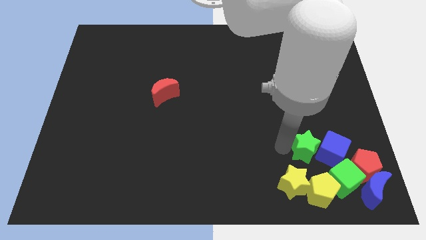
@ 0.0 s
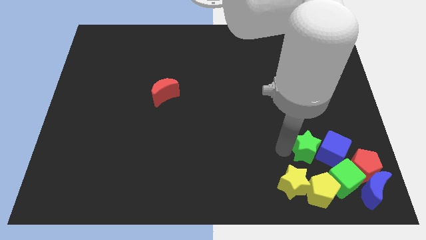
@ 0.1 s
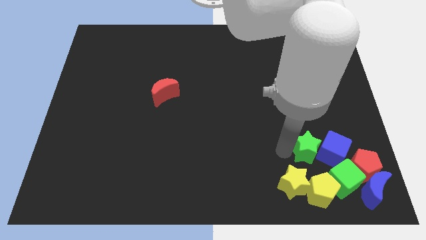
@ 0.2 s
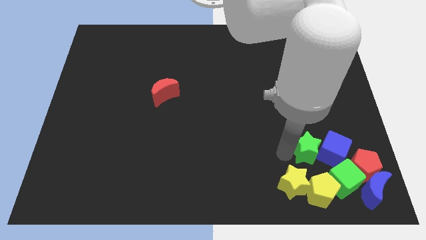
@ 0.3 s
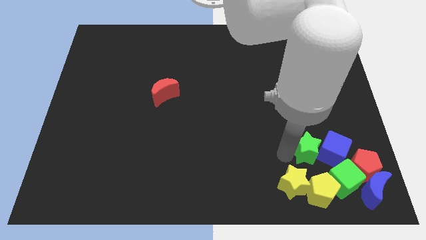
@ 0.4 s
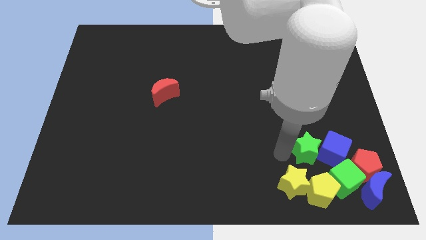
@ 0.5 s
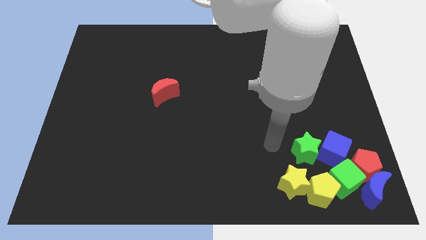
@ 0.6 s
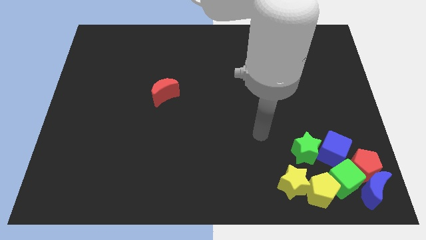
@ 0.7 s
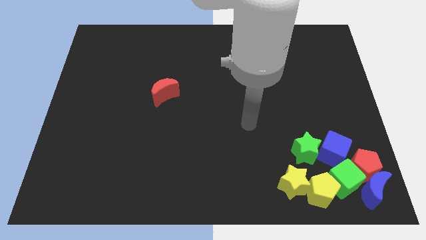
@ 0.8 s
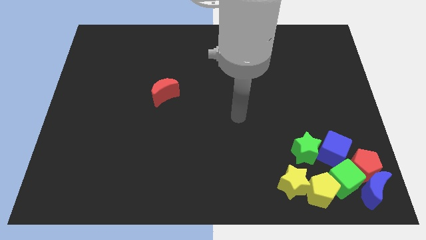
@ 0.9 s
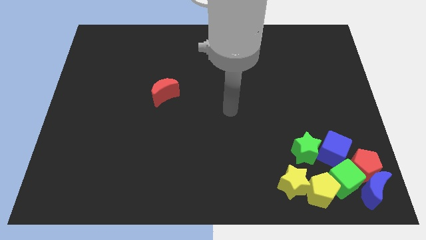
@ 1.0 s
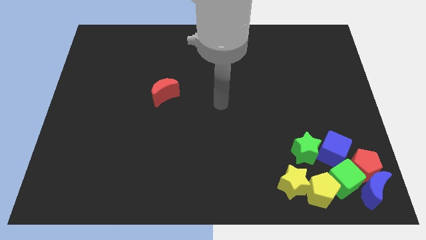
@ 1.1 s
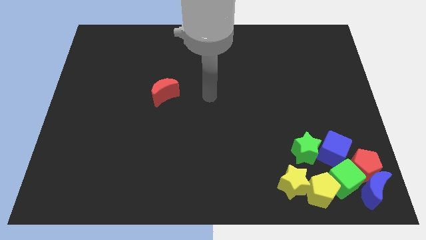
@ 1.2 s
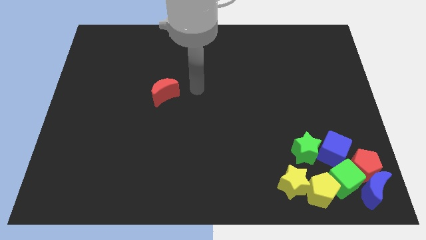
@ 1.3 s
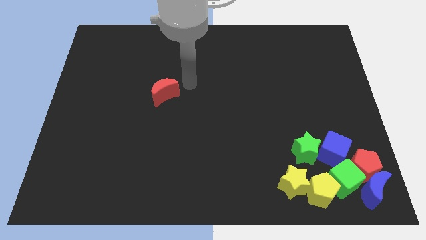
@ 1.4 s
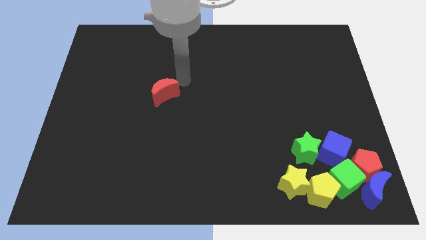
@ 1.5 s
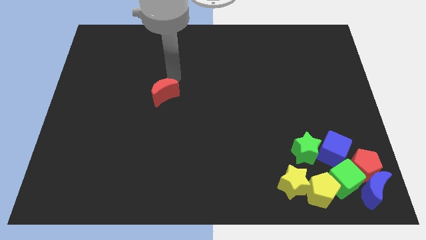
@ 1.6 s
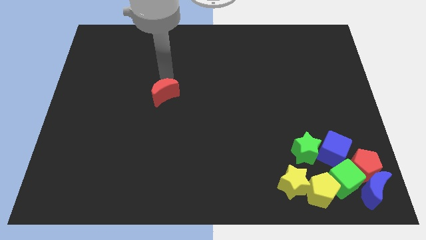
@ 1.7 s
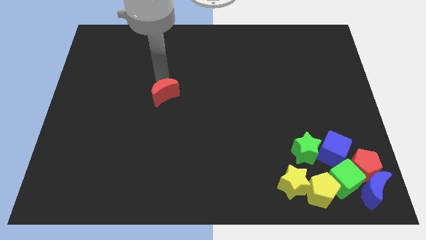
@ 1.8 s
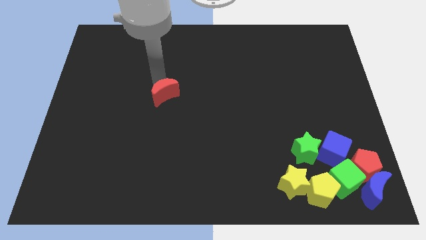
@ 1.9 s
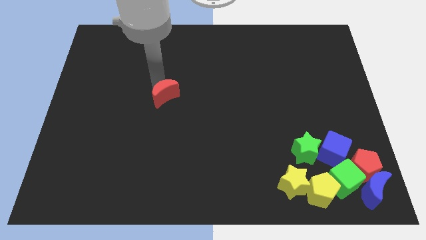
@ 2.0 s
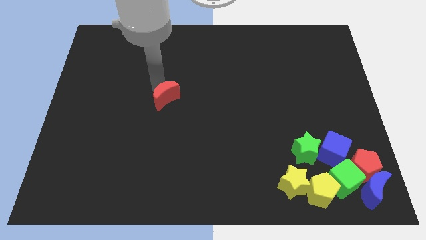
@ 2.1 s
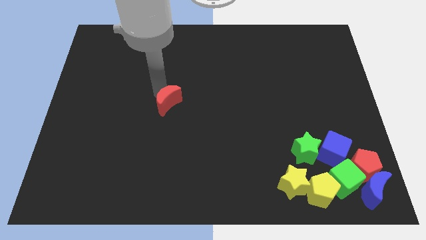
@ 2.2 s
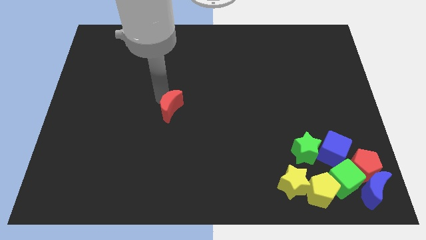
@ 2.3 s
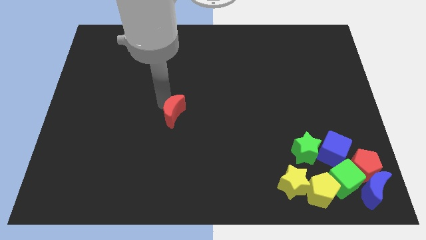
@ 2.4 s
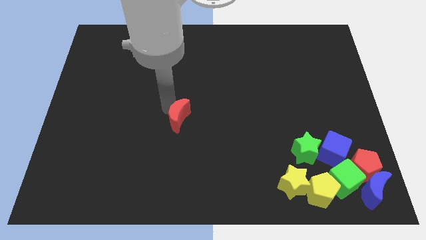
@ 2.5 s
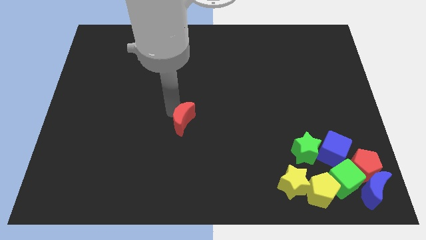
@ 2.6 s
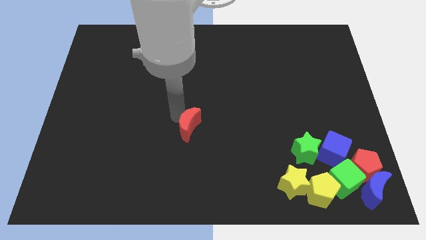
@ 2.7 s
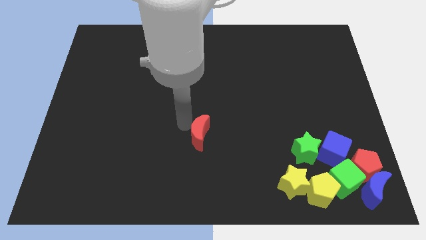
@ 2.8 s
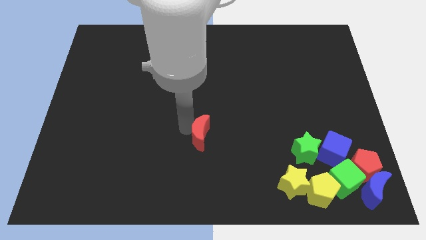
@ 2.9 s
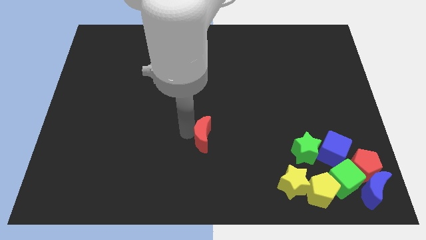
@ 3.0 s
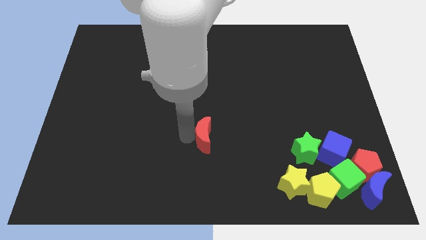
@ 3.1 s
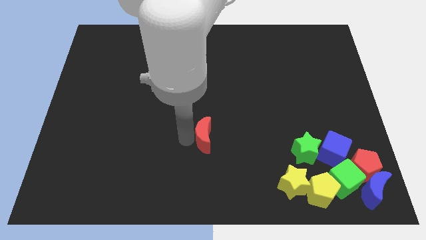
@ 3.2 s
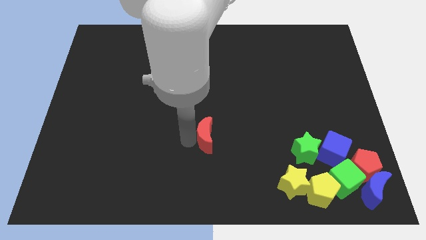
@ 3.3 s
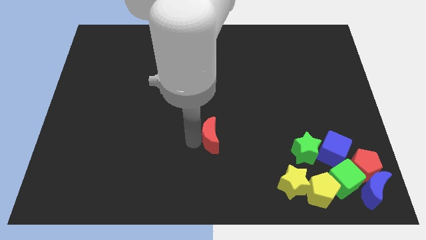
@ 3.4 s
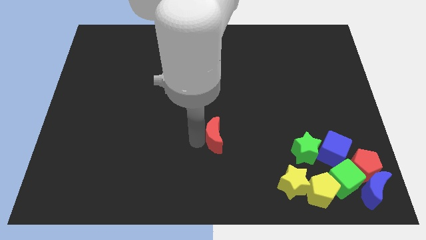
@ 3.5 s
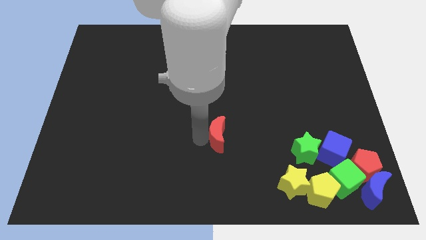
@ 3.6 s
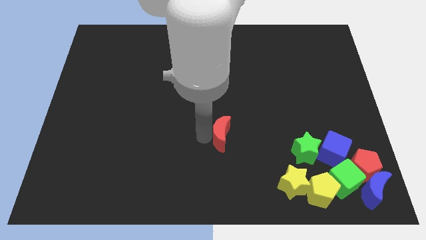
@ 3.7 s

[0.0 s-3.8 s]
move the red crescent towards the group of blocks

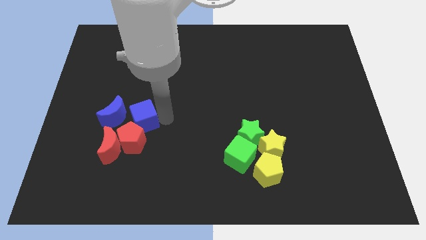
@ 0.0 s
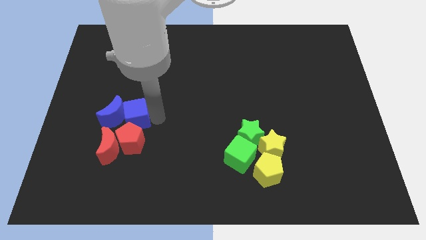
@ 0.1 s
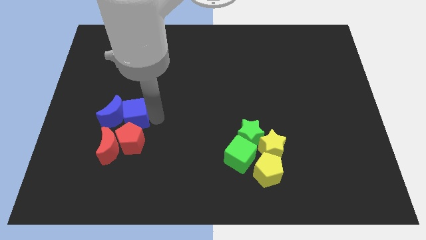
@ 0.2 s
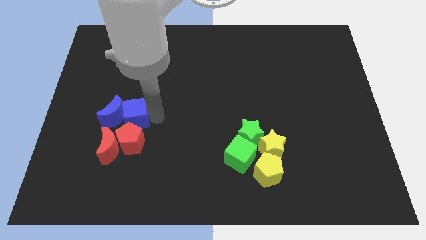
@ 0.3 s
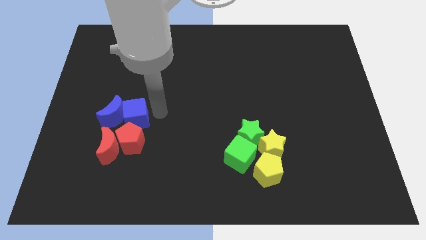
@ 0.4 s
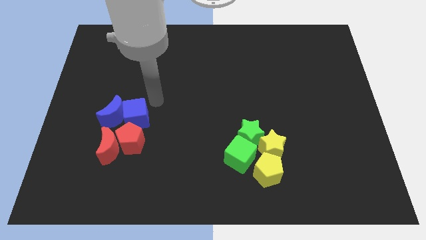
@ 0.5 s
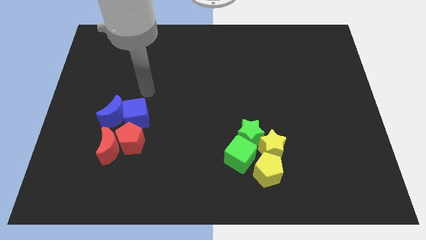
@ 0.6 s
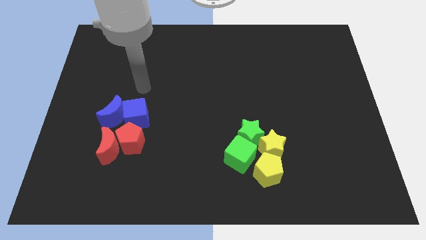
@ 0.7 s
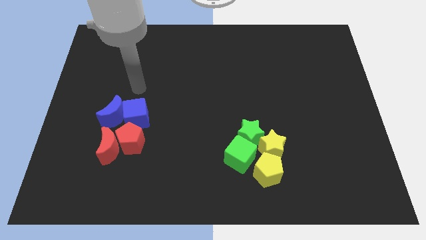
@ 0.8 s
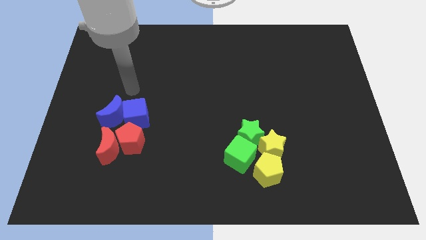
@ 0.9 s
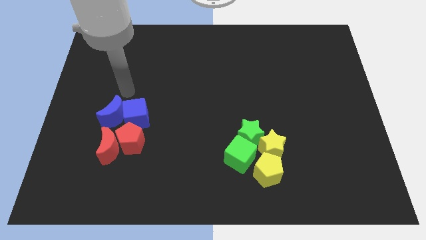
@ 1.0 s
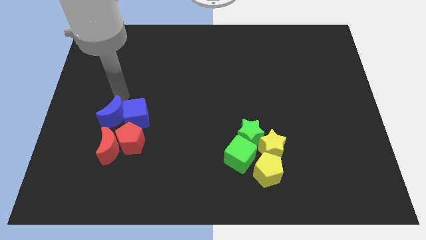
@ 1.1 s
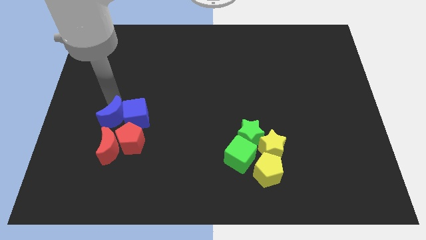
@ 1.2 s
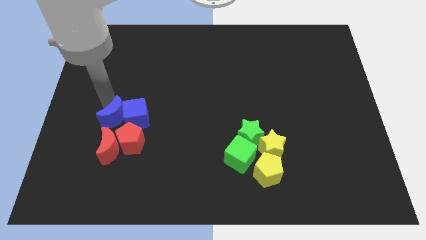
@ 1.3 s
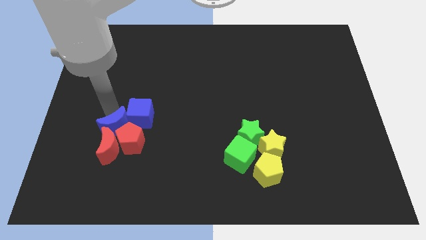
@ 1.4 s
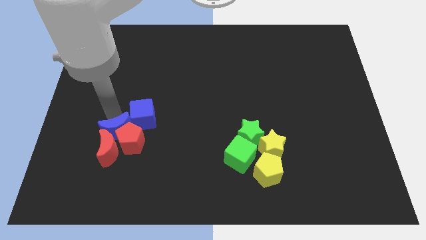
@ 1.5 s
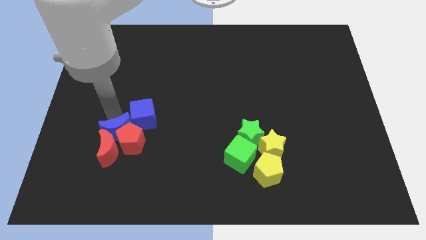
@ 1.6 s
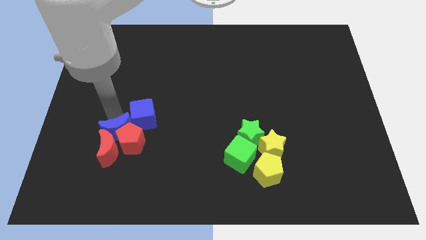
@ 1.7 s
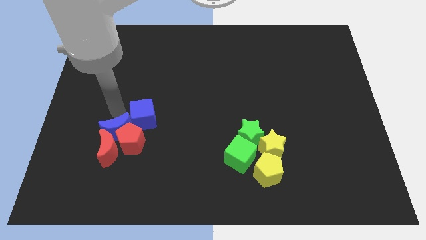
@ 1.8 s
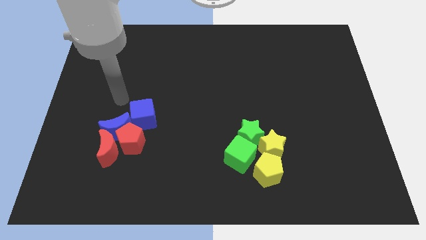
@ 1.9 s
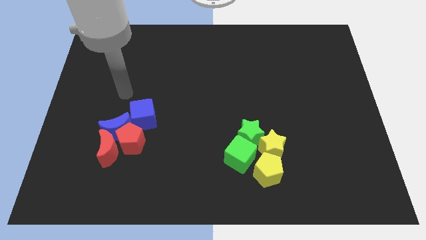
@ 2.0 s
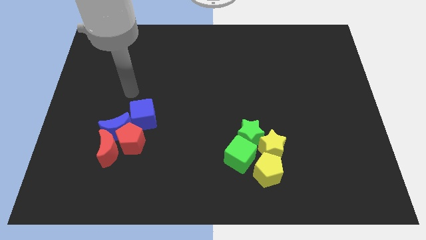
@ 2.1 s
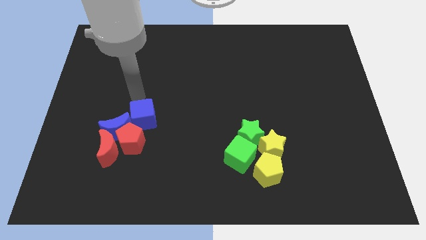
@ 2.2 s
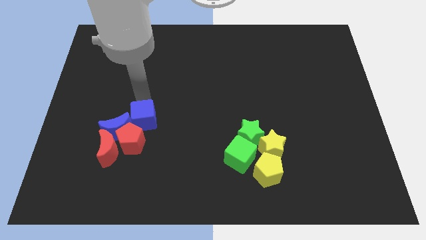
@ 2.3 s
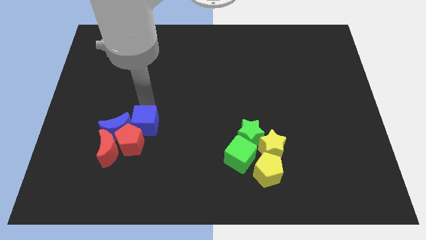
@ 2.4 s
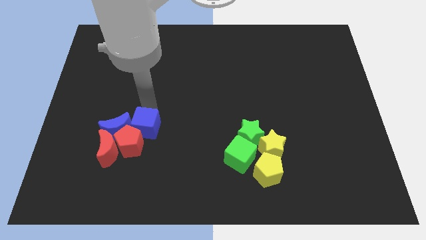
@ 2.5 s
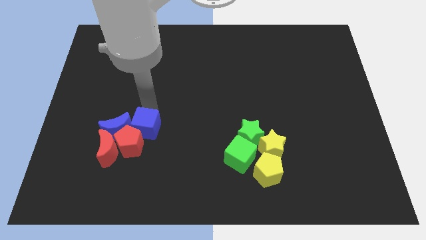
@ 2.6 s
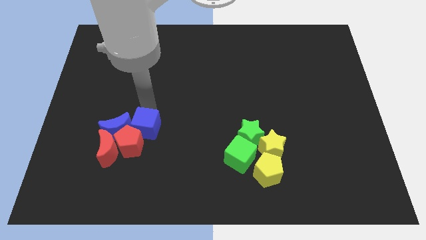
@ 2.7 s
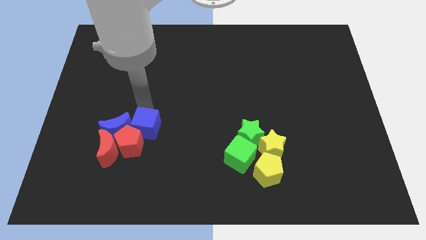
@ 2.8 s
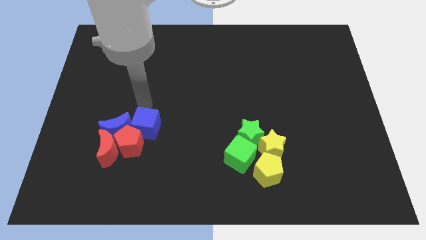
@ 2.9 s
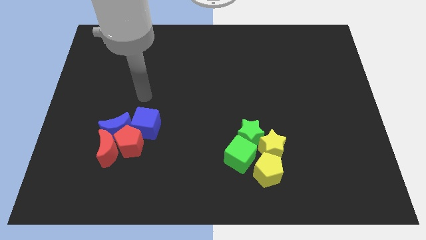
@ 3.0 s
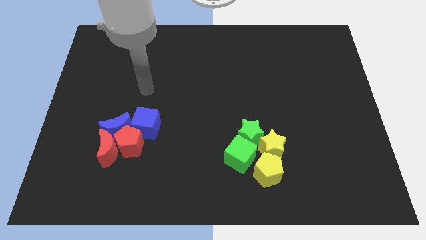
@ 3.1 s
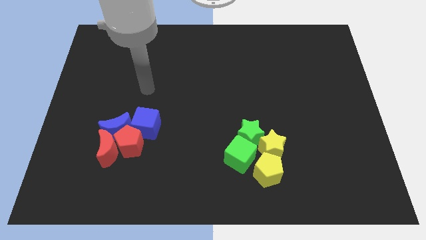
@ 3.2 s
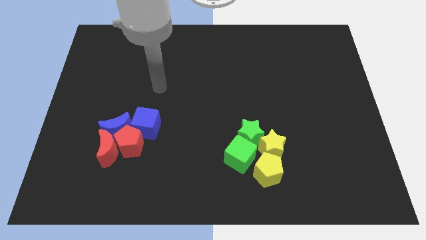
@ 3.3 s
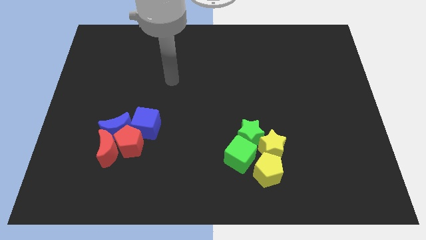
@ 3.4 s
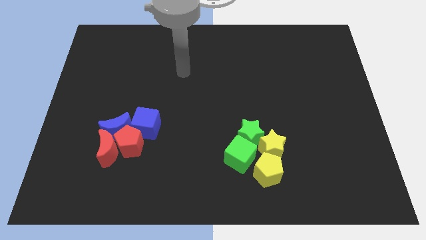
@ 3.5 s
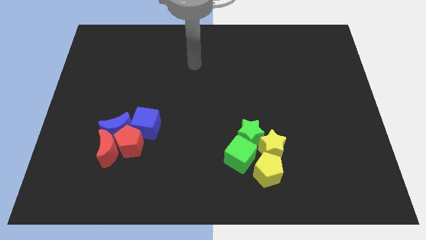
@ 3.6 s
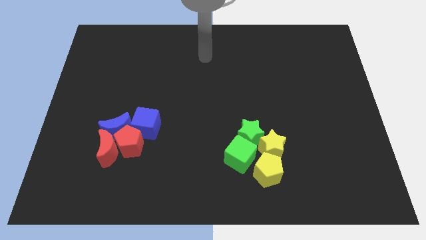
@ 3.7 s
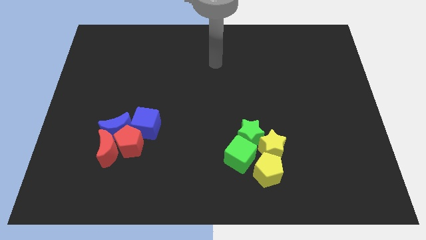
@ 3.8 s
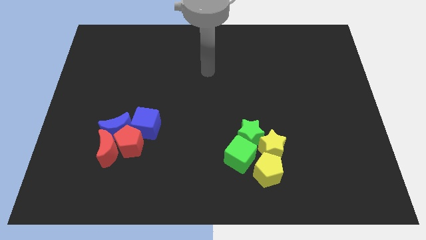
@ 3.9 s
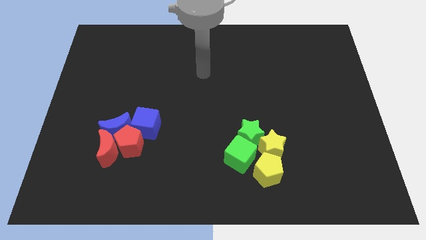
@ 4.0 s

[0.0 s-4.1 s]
adjust the both blue blocks to form a group with the both red blocks

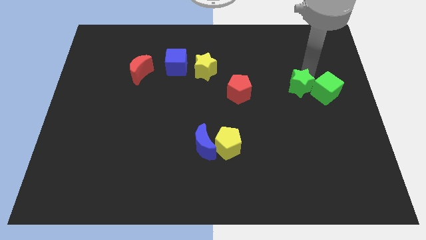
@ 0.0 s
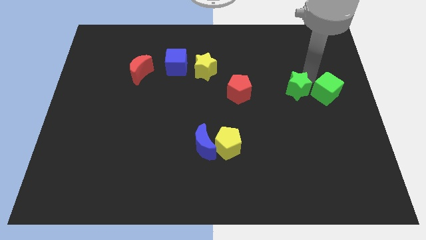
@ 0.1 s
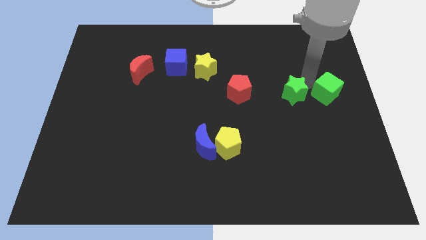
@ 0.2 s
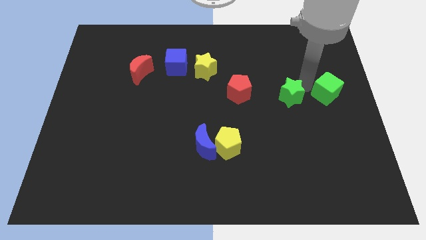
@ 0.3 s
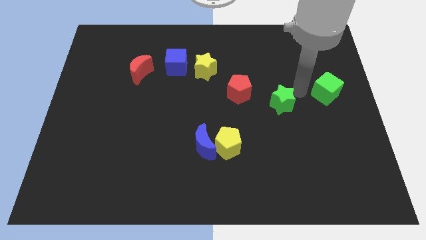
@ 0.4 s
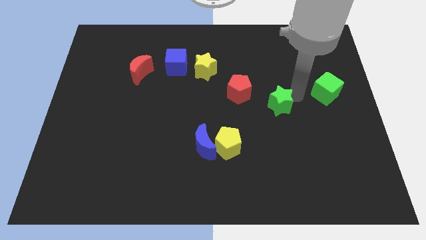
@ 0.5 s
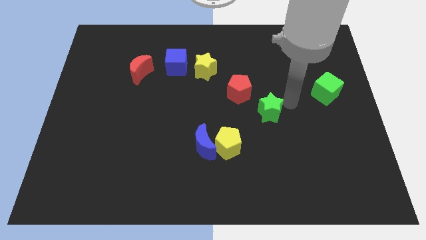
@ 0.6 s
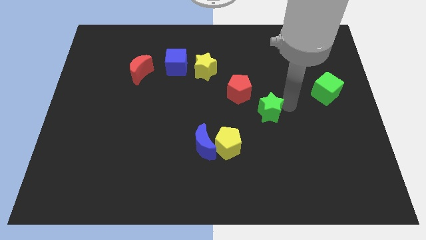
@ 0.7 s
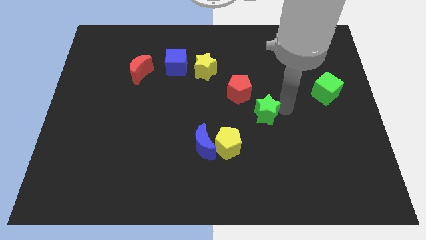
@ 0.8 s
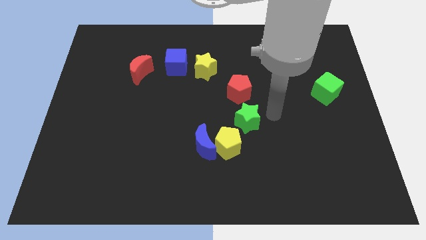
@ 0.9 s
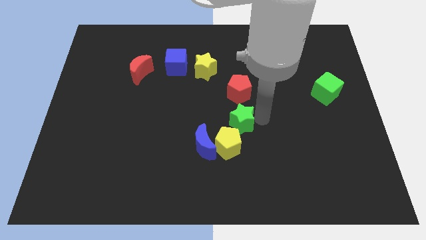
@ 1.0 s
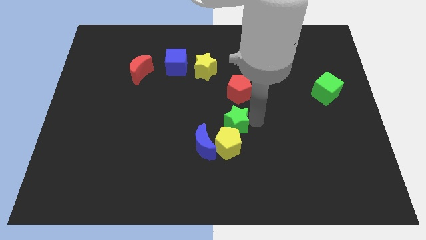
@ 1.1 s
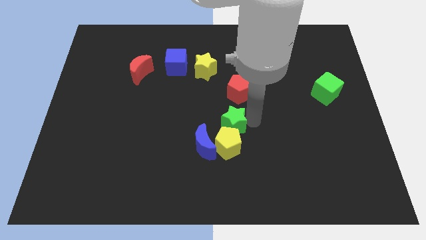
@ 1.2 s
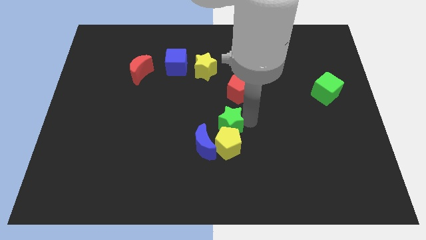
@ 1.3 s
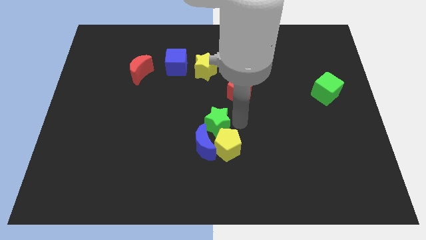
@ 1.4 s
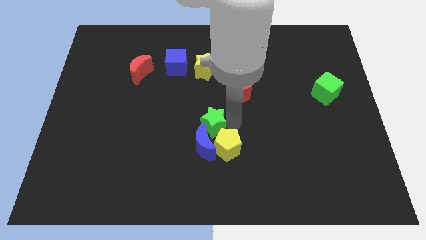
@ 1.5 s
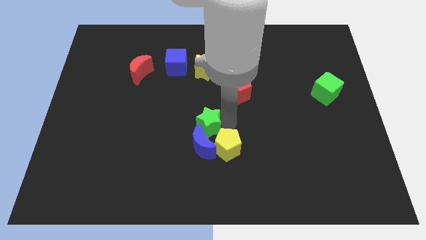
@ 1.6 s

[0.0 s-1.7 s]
move the green star above the blue crescent
